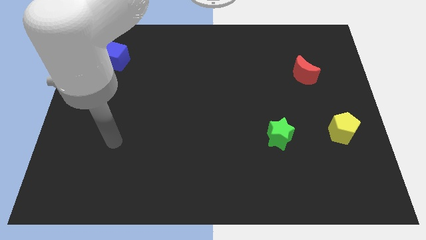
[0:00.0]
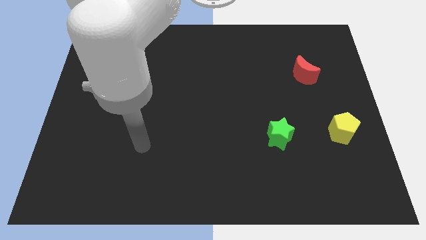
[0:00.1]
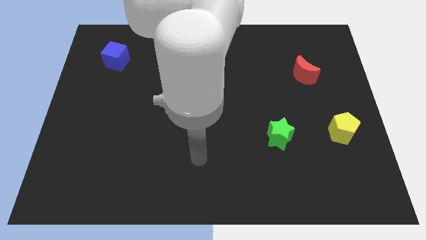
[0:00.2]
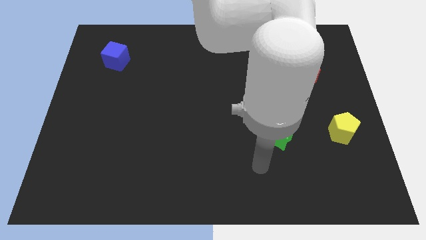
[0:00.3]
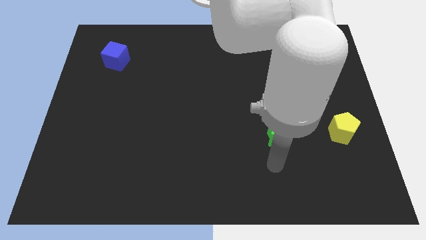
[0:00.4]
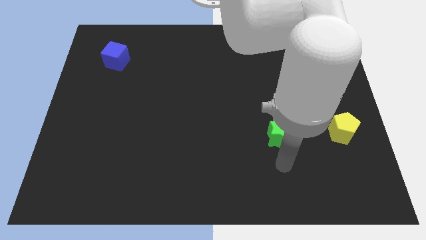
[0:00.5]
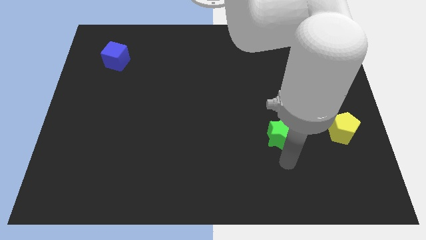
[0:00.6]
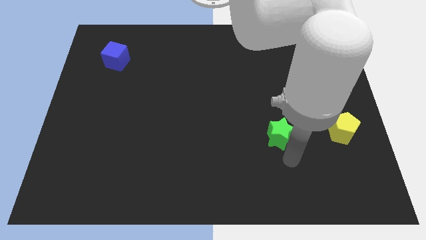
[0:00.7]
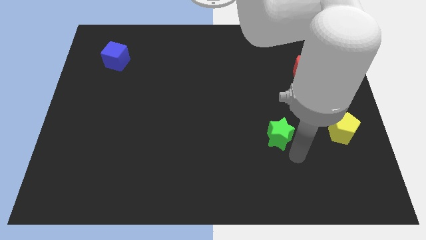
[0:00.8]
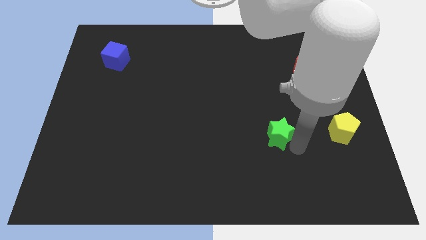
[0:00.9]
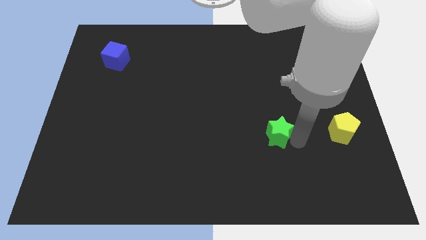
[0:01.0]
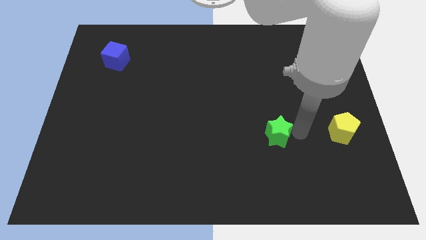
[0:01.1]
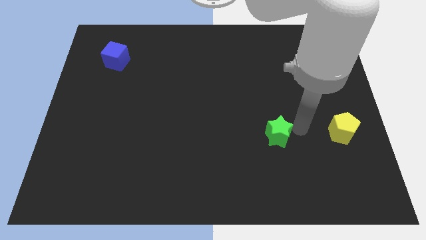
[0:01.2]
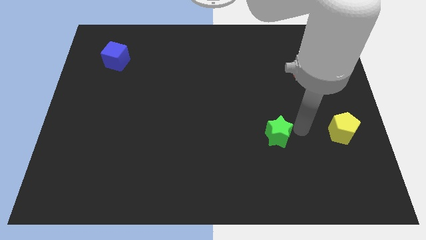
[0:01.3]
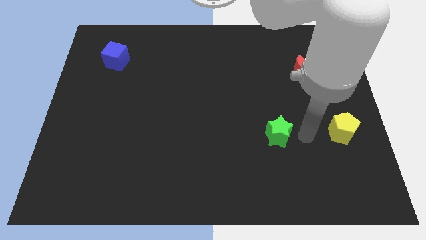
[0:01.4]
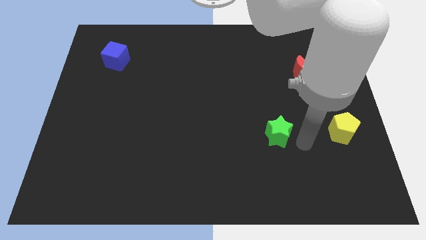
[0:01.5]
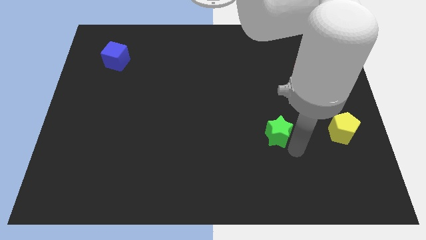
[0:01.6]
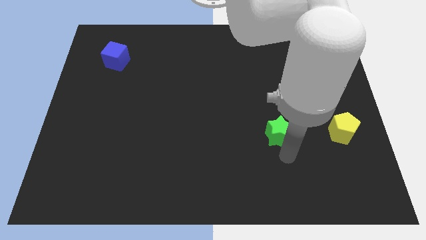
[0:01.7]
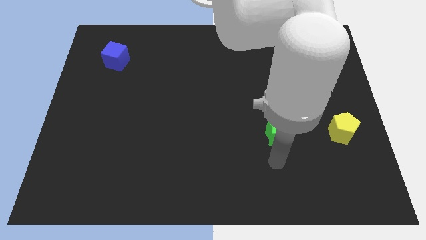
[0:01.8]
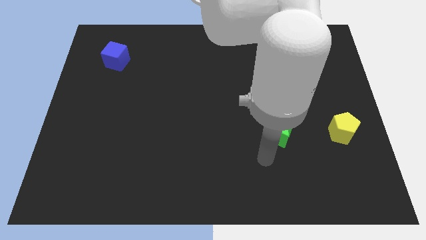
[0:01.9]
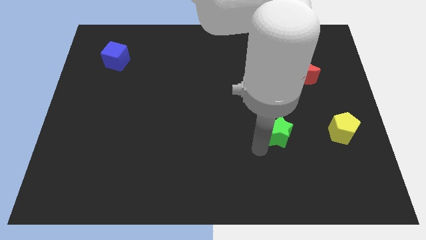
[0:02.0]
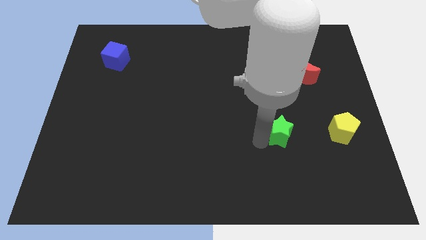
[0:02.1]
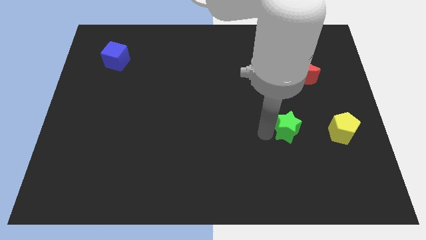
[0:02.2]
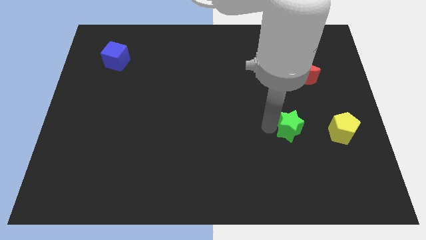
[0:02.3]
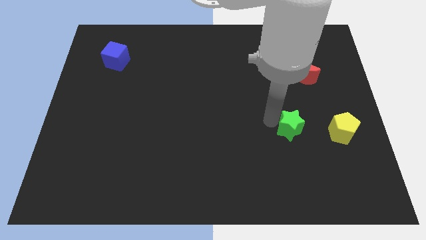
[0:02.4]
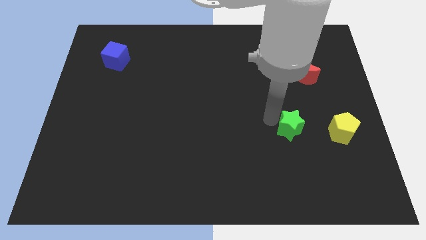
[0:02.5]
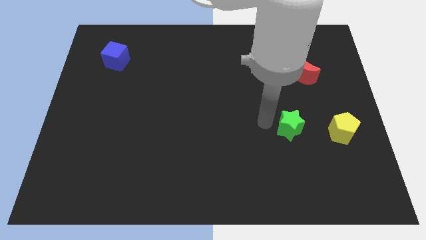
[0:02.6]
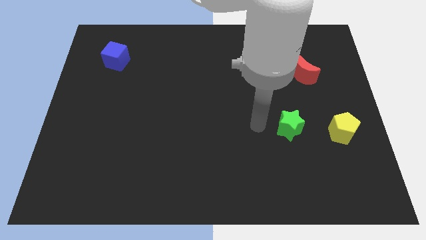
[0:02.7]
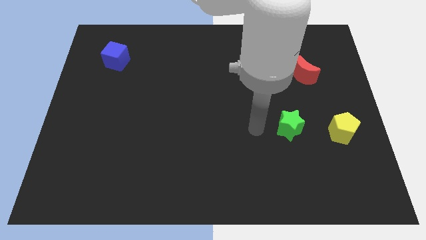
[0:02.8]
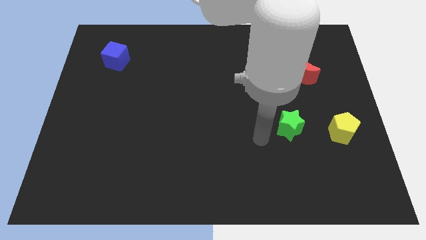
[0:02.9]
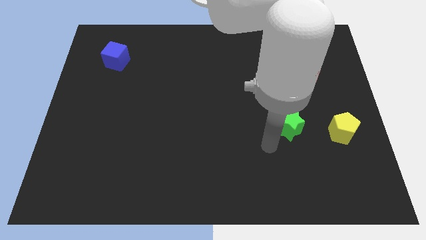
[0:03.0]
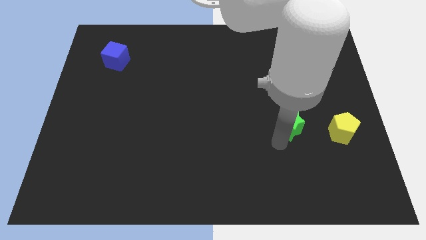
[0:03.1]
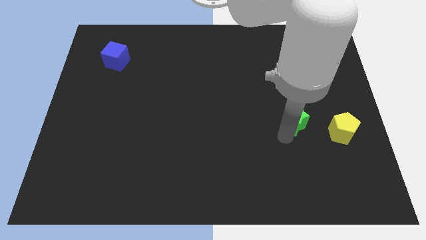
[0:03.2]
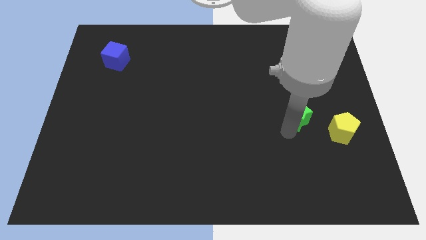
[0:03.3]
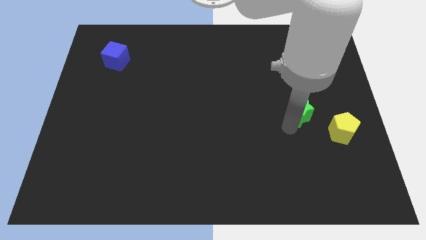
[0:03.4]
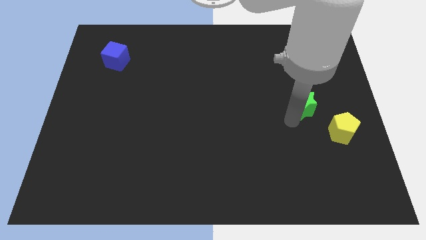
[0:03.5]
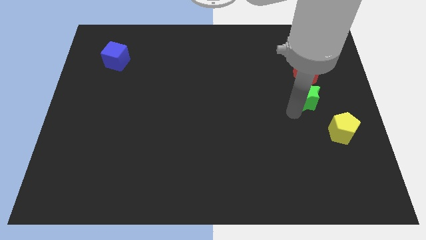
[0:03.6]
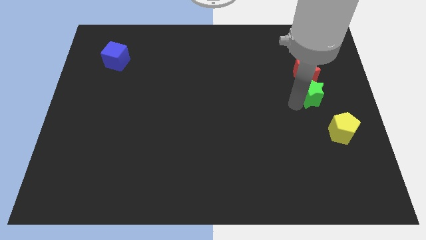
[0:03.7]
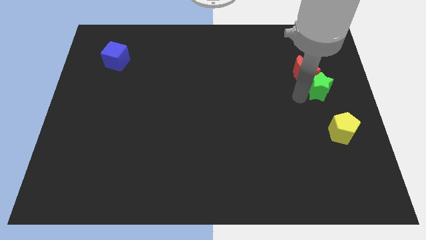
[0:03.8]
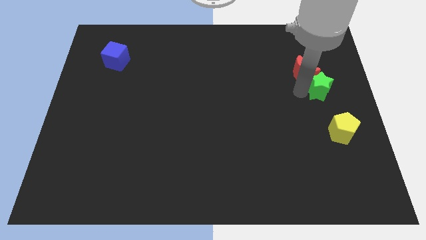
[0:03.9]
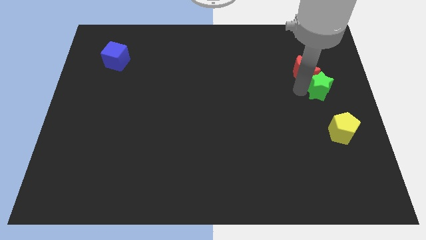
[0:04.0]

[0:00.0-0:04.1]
slide the star towards the red moon

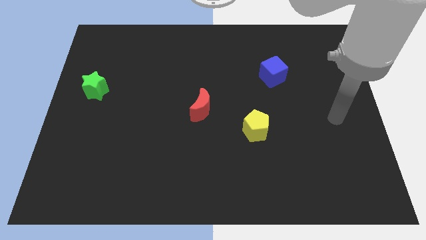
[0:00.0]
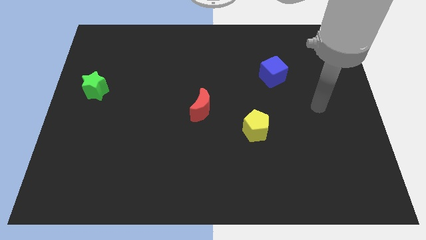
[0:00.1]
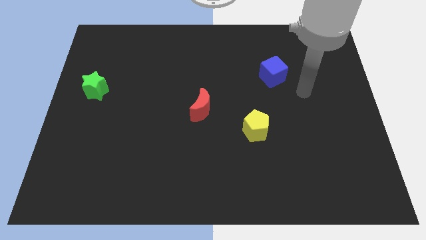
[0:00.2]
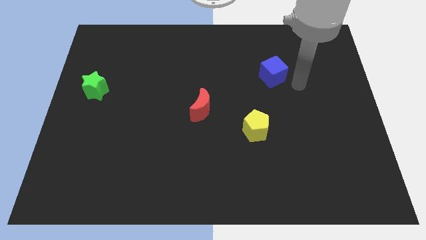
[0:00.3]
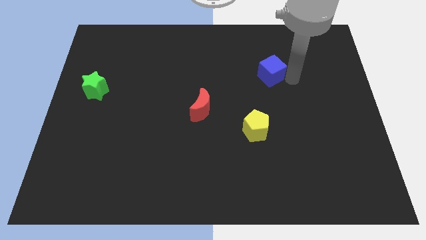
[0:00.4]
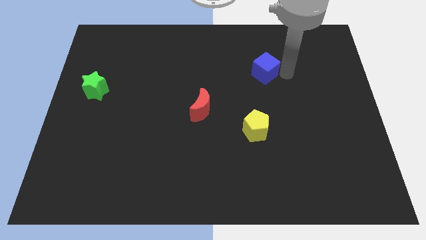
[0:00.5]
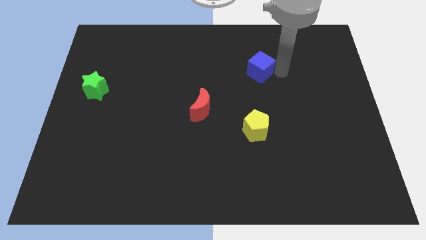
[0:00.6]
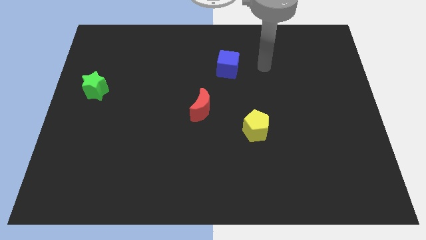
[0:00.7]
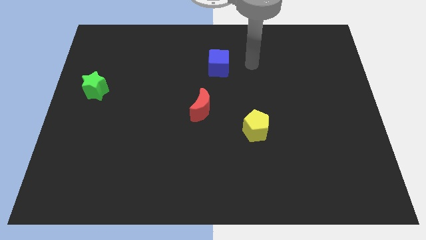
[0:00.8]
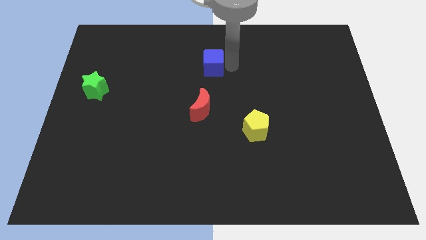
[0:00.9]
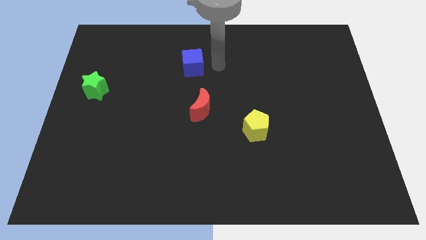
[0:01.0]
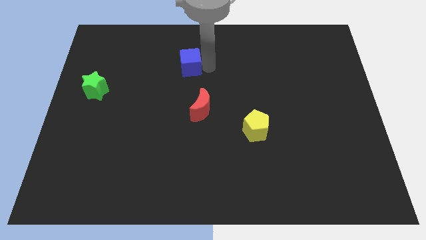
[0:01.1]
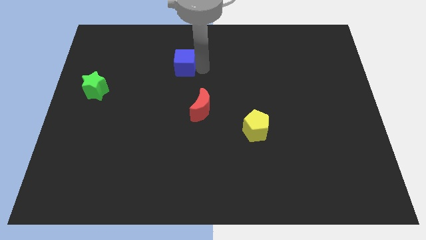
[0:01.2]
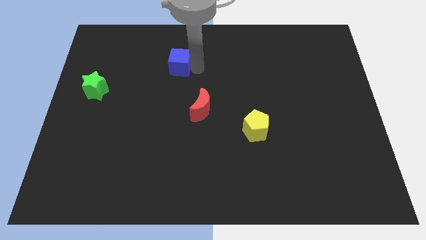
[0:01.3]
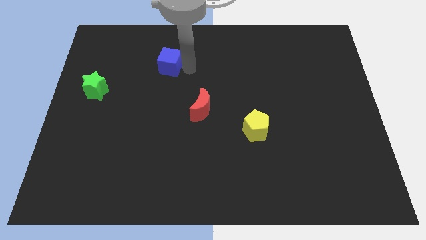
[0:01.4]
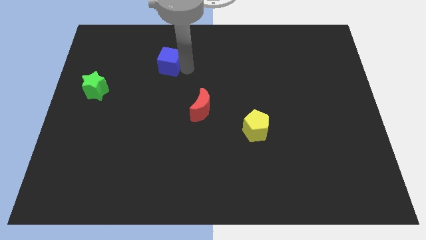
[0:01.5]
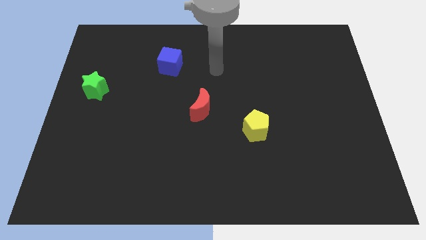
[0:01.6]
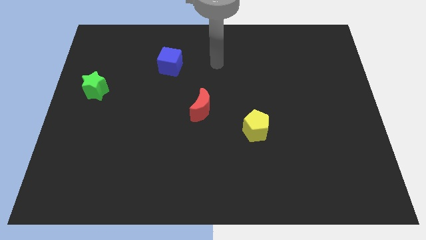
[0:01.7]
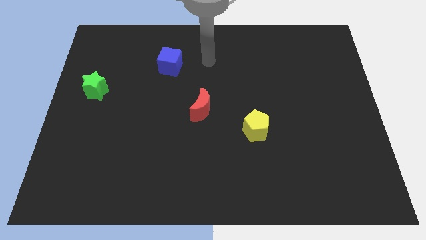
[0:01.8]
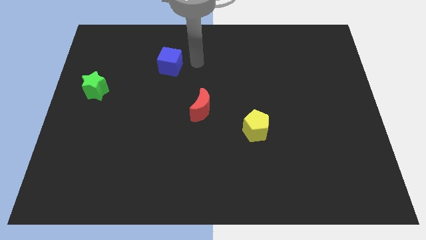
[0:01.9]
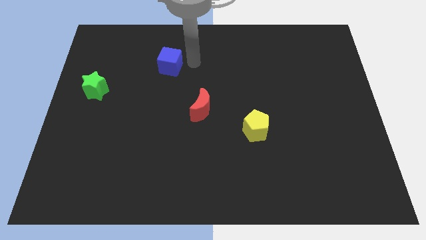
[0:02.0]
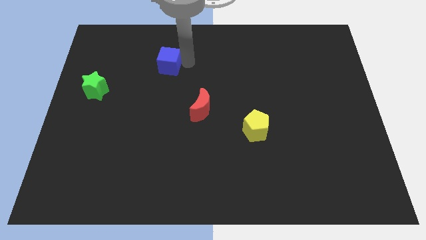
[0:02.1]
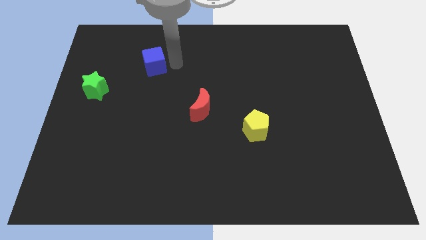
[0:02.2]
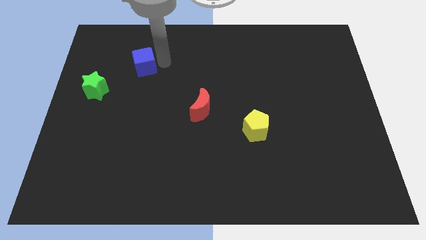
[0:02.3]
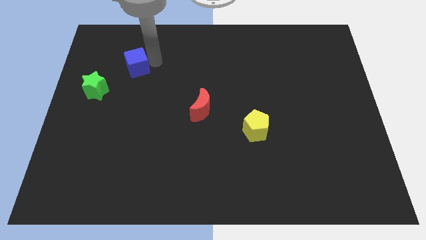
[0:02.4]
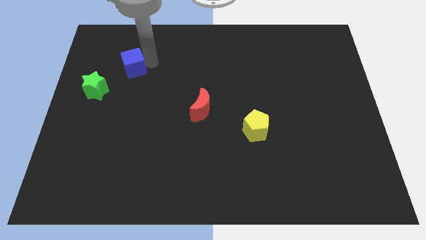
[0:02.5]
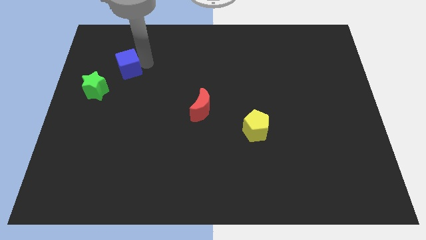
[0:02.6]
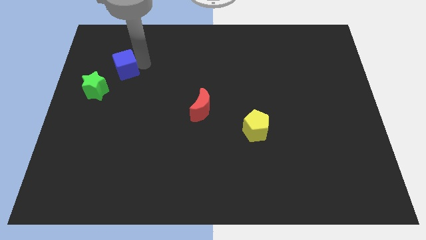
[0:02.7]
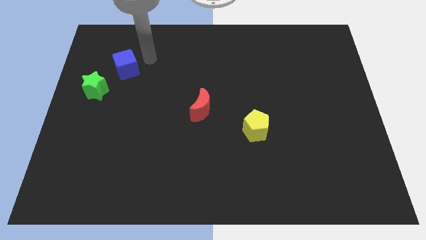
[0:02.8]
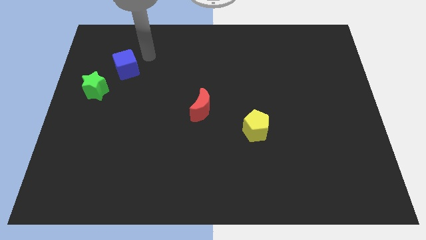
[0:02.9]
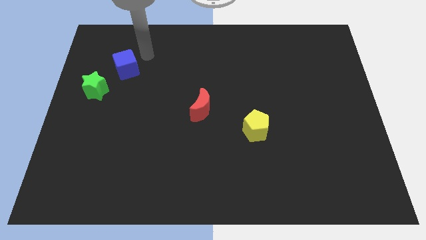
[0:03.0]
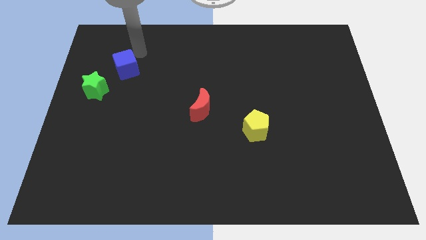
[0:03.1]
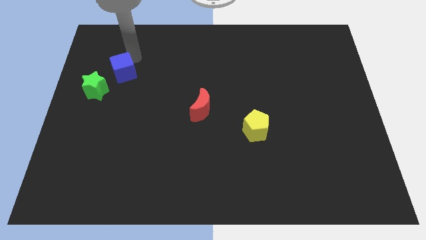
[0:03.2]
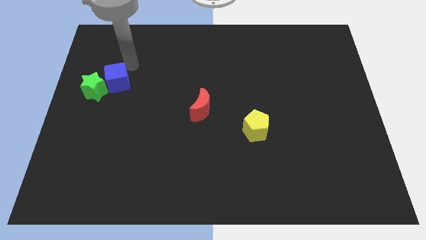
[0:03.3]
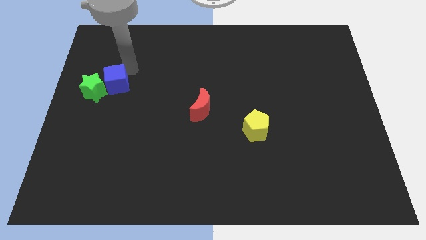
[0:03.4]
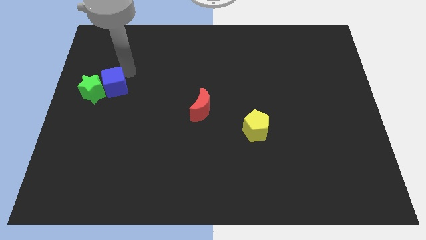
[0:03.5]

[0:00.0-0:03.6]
move the cube next to the green star

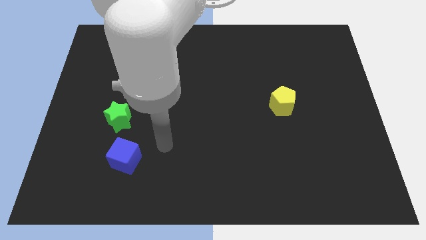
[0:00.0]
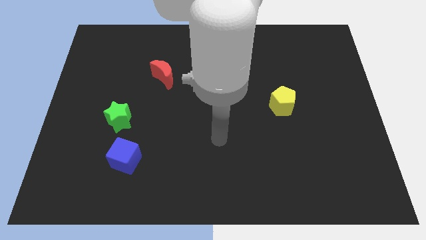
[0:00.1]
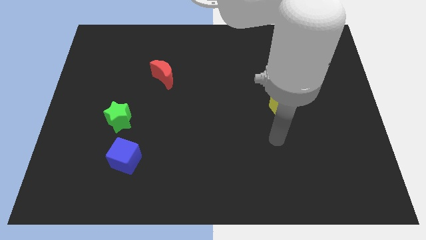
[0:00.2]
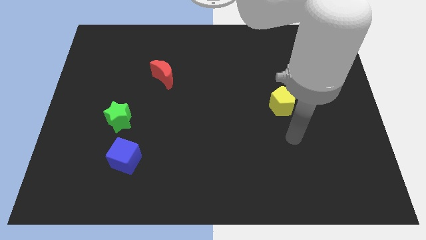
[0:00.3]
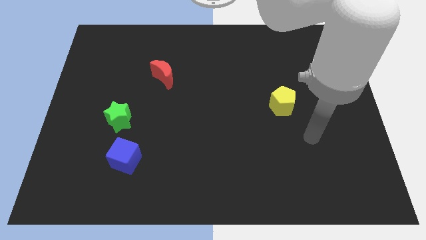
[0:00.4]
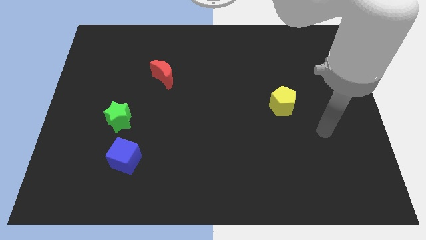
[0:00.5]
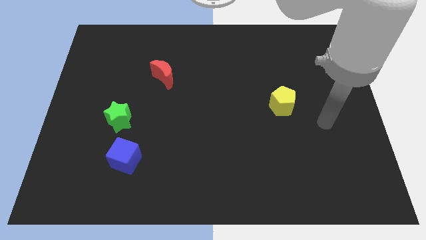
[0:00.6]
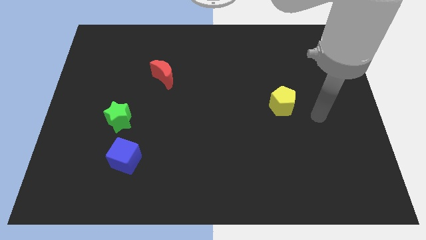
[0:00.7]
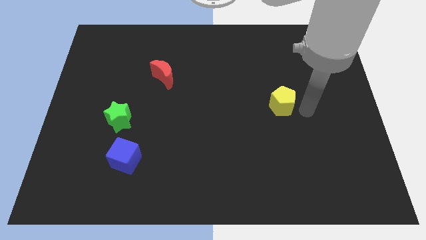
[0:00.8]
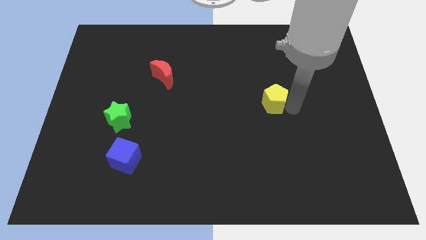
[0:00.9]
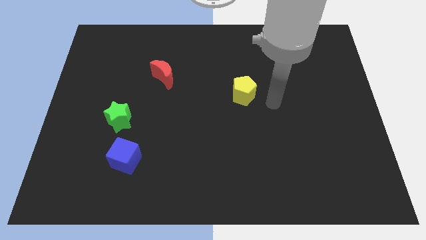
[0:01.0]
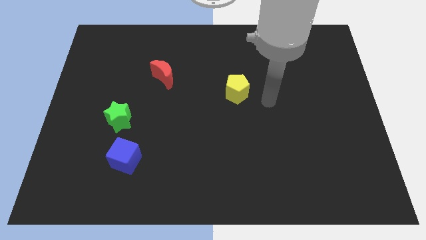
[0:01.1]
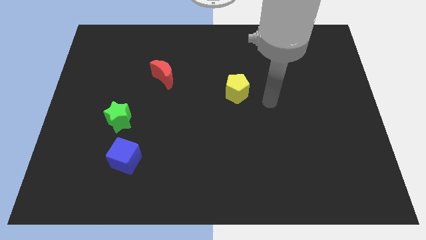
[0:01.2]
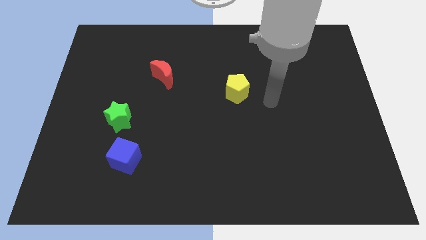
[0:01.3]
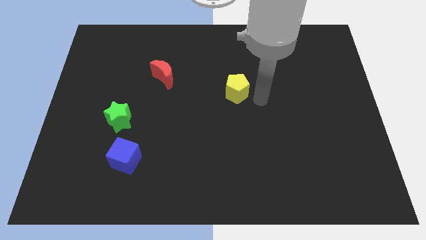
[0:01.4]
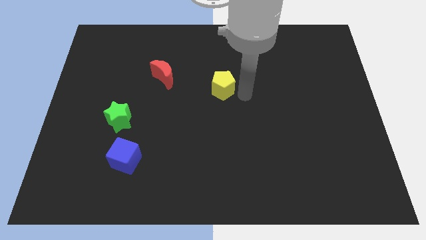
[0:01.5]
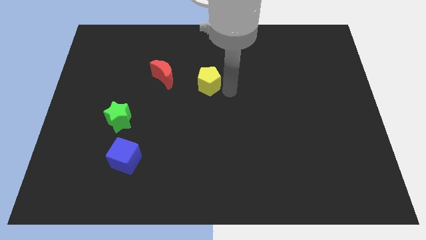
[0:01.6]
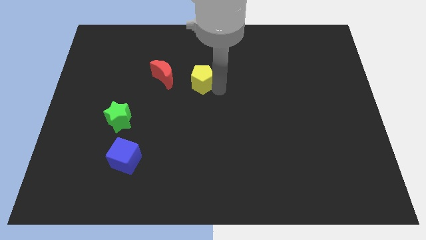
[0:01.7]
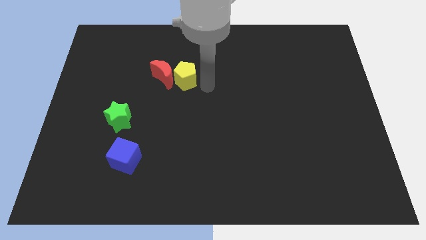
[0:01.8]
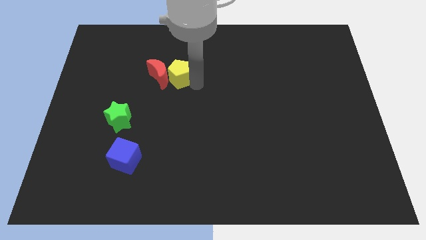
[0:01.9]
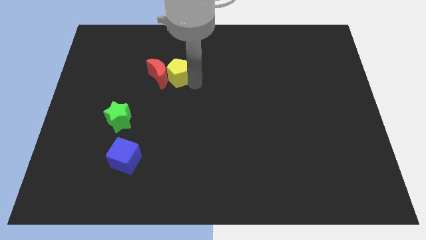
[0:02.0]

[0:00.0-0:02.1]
put the yellow pentagon to the red moon
